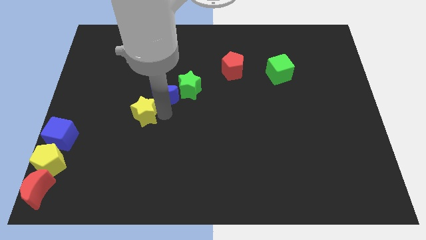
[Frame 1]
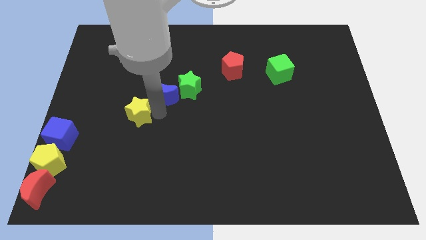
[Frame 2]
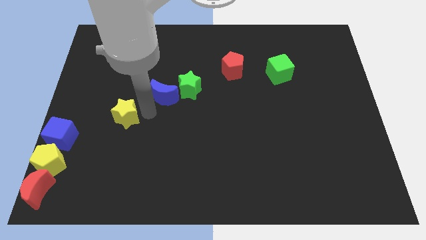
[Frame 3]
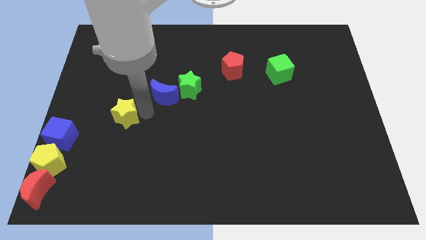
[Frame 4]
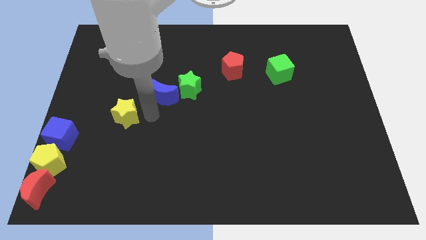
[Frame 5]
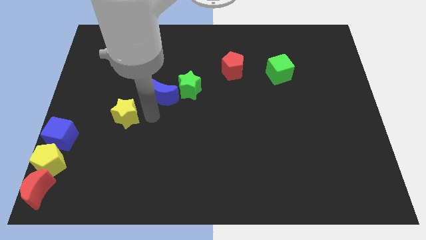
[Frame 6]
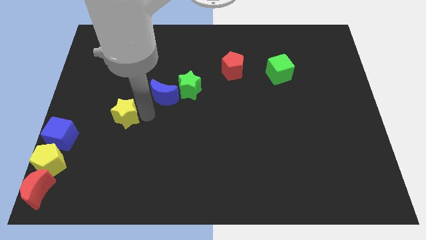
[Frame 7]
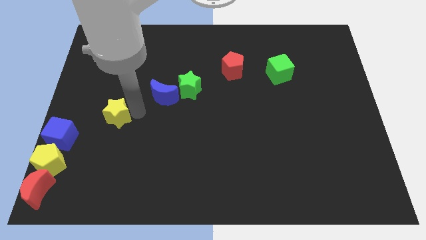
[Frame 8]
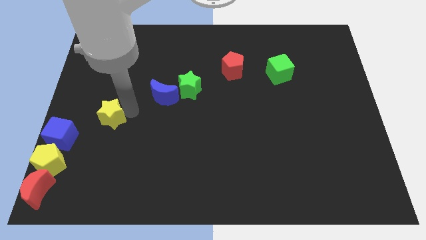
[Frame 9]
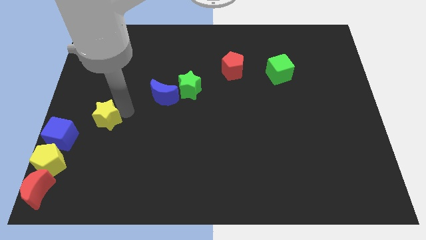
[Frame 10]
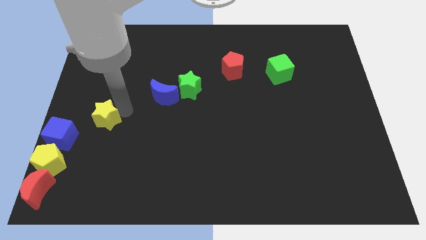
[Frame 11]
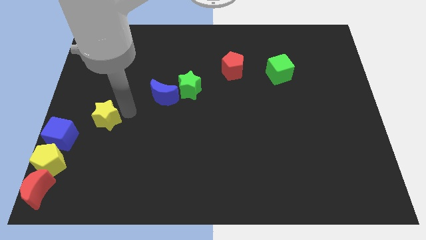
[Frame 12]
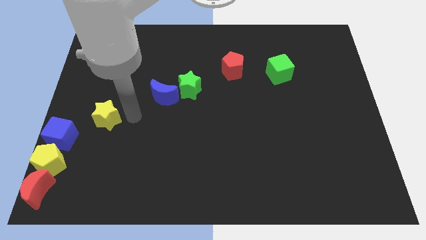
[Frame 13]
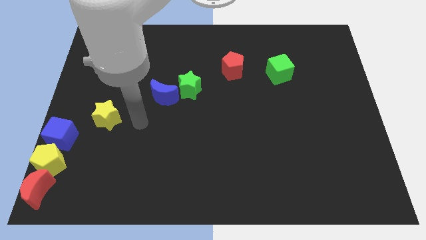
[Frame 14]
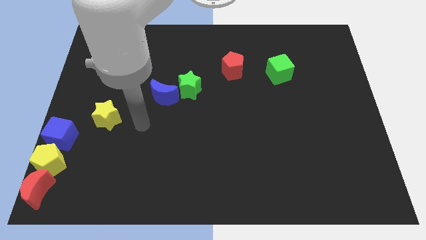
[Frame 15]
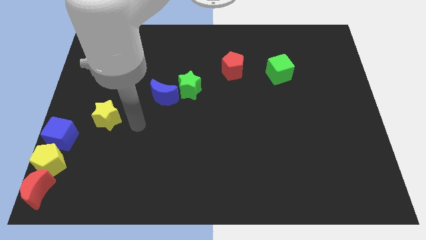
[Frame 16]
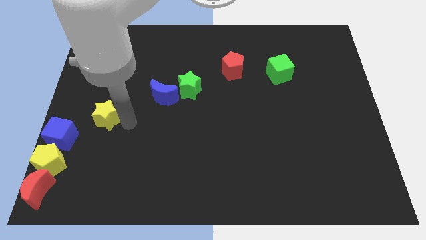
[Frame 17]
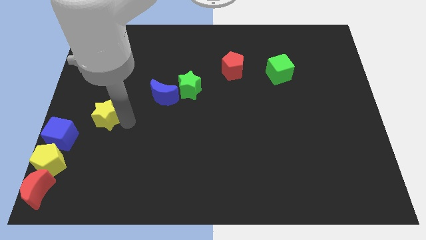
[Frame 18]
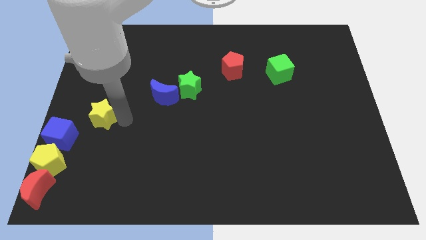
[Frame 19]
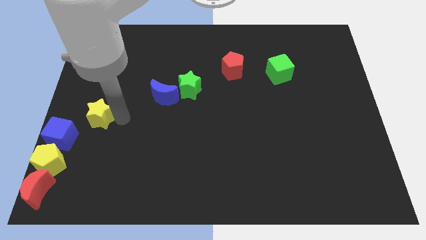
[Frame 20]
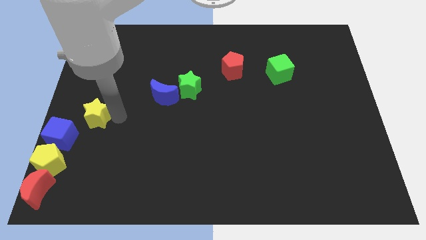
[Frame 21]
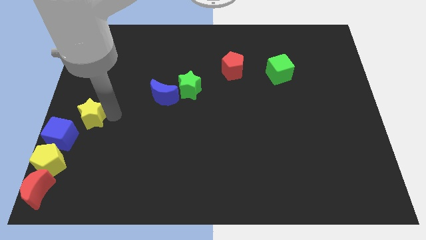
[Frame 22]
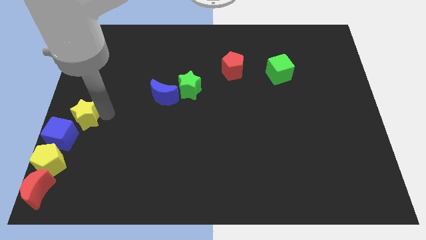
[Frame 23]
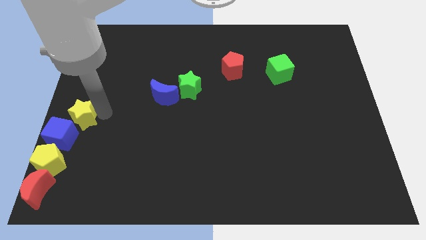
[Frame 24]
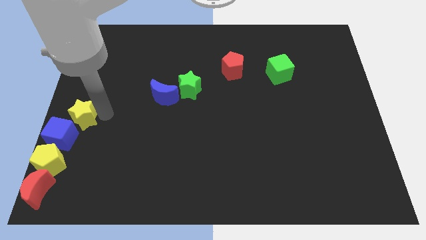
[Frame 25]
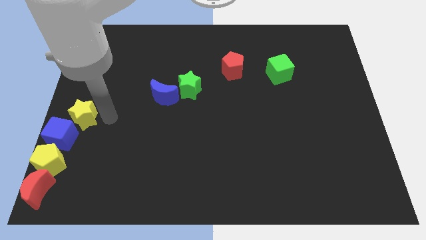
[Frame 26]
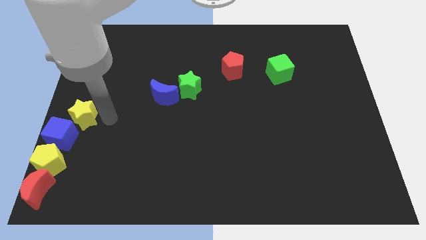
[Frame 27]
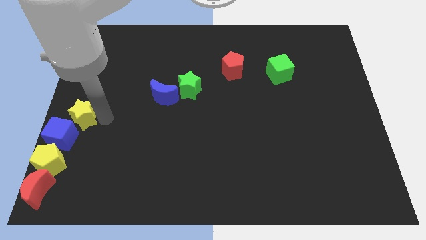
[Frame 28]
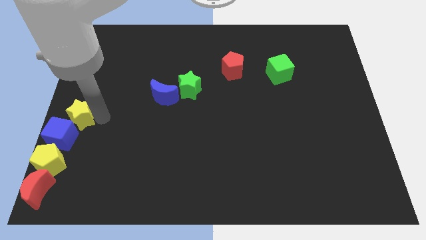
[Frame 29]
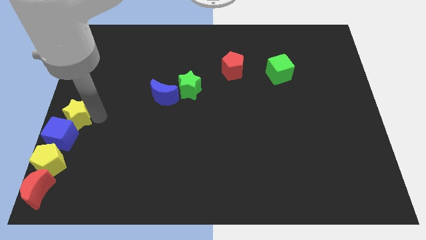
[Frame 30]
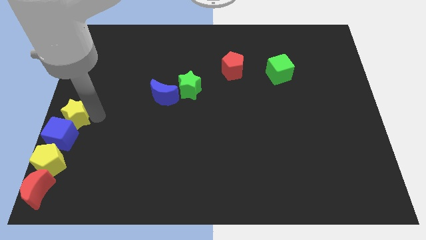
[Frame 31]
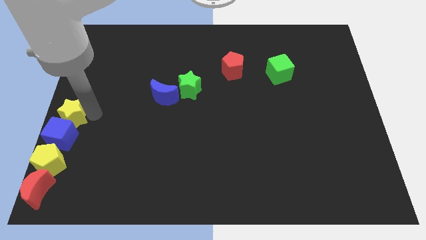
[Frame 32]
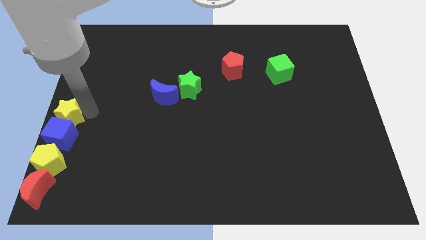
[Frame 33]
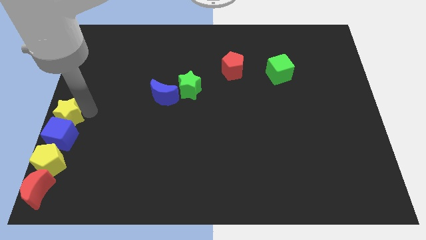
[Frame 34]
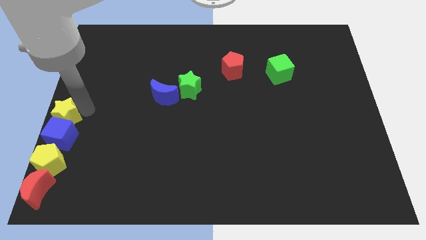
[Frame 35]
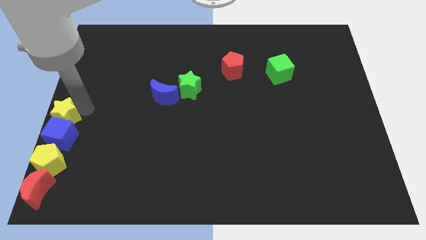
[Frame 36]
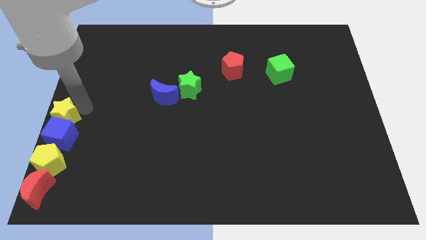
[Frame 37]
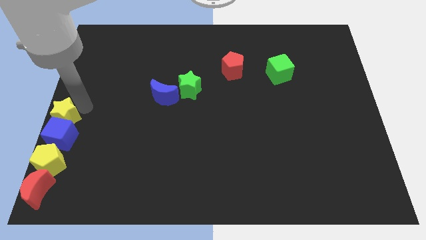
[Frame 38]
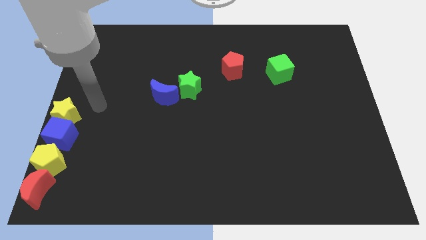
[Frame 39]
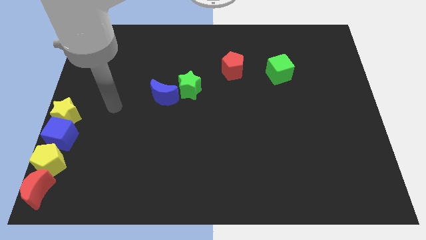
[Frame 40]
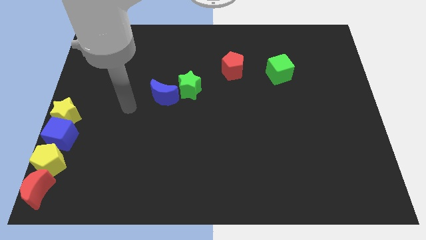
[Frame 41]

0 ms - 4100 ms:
move the yellow star above to the blue cube

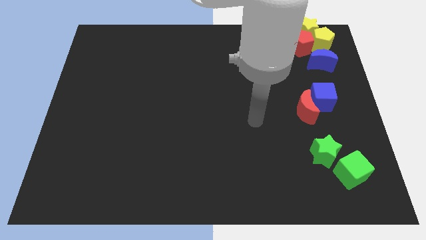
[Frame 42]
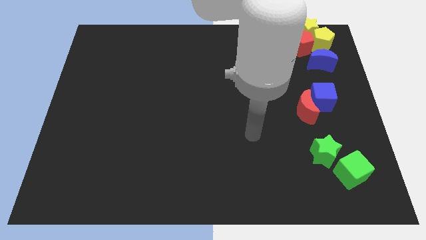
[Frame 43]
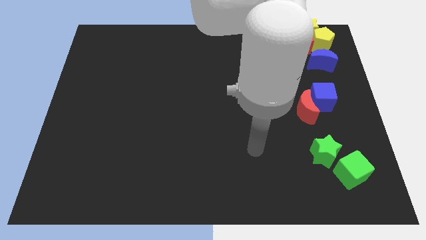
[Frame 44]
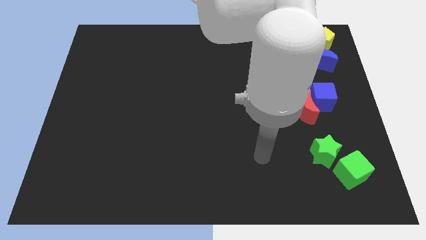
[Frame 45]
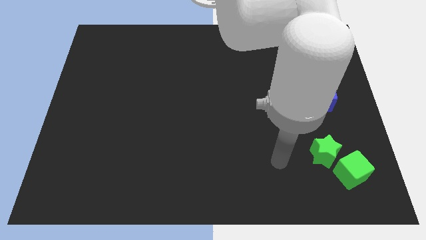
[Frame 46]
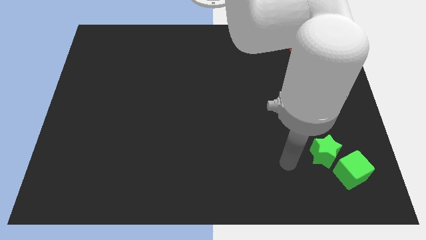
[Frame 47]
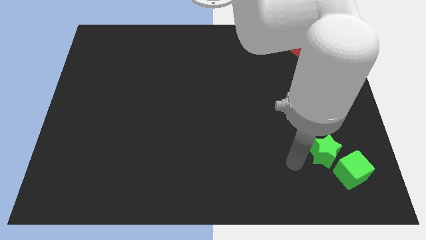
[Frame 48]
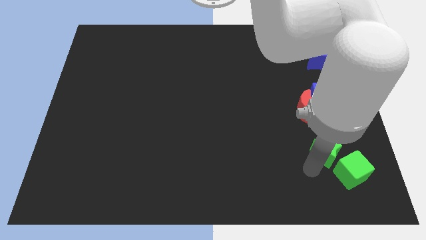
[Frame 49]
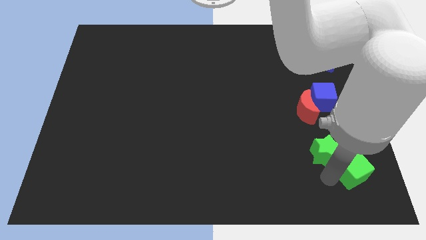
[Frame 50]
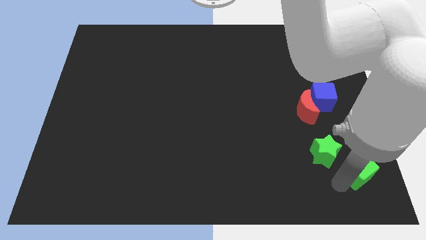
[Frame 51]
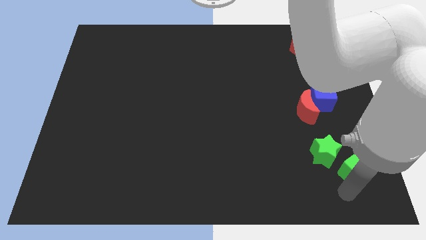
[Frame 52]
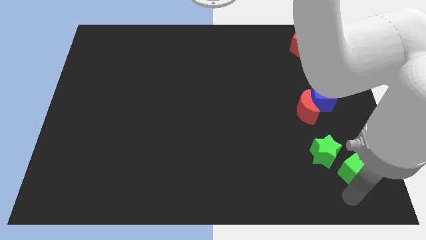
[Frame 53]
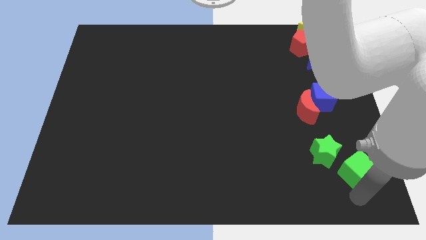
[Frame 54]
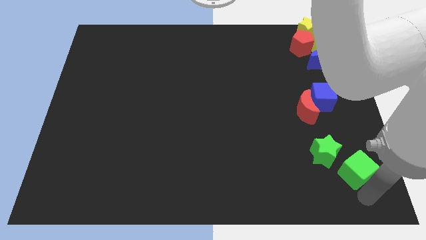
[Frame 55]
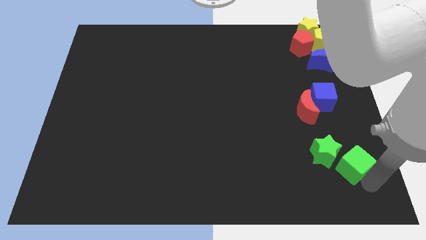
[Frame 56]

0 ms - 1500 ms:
touch the green cube with your arm

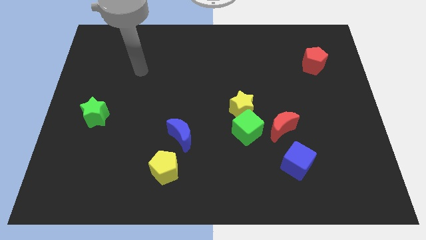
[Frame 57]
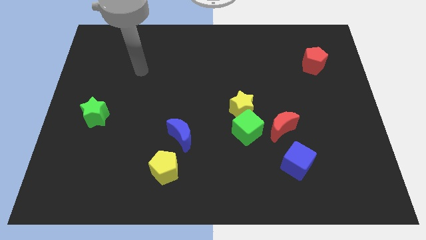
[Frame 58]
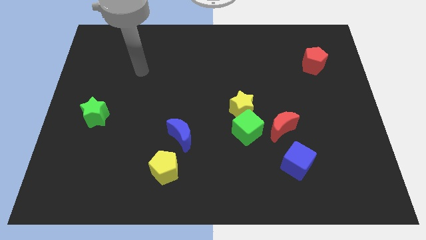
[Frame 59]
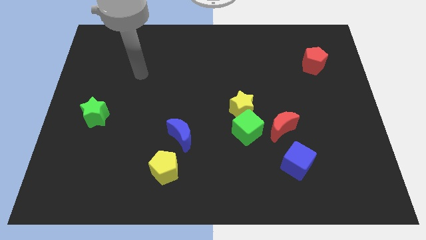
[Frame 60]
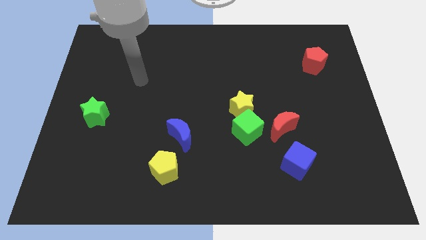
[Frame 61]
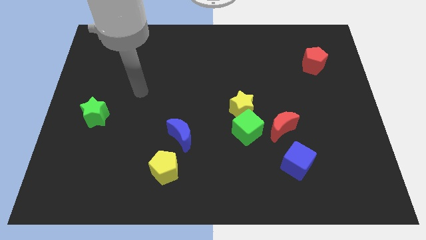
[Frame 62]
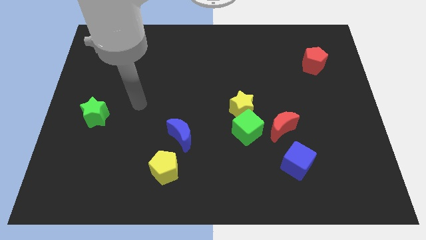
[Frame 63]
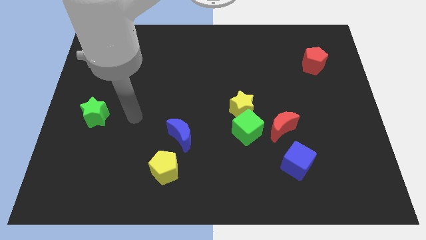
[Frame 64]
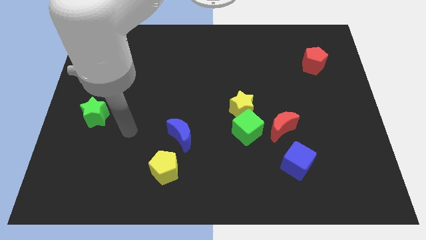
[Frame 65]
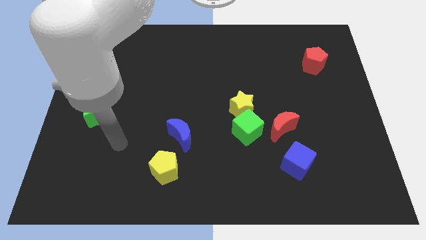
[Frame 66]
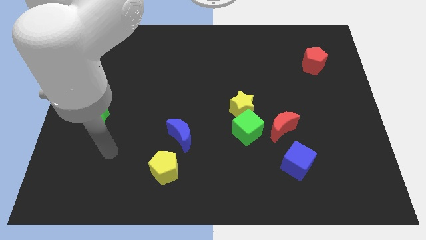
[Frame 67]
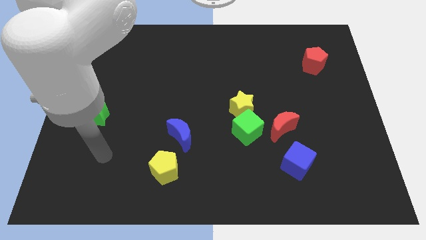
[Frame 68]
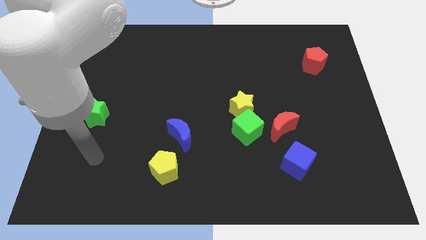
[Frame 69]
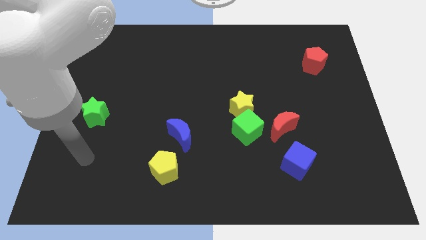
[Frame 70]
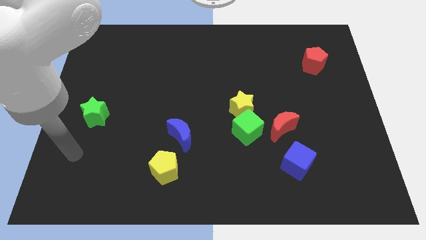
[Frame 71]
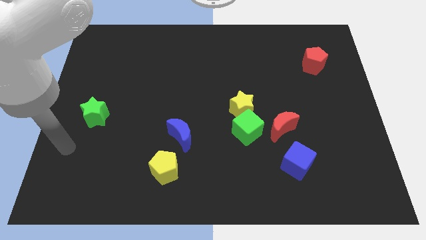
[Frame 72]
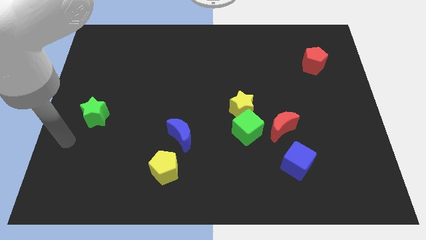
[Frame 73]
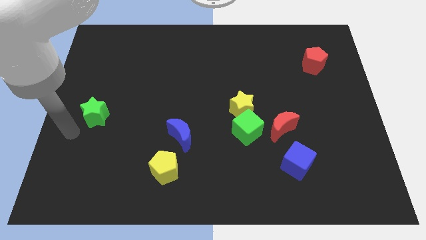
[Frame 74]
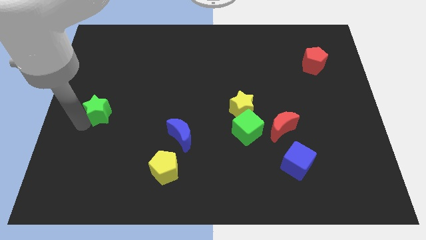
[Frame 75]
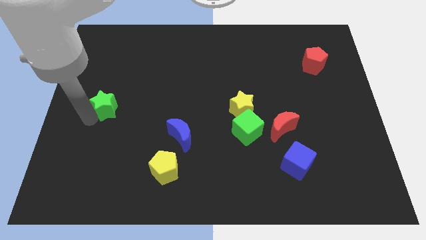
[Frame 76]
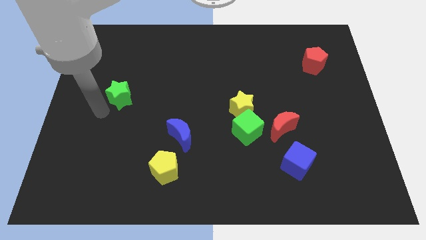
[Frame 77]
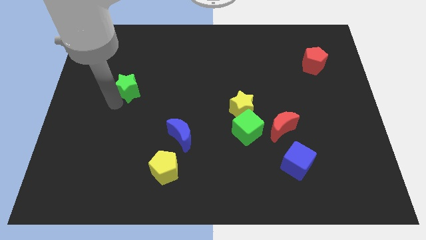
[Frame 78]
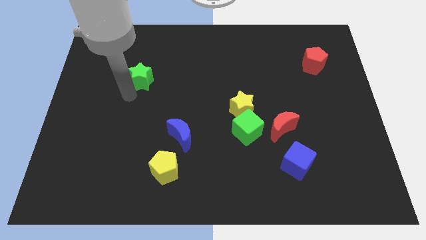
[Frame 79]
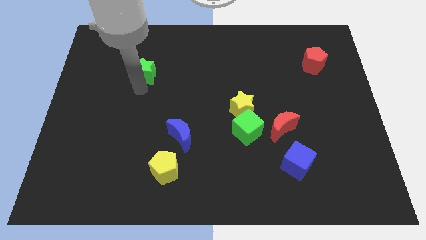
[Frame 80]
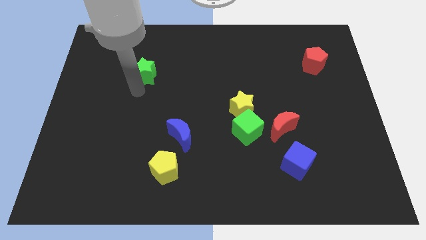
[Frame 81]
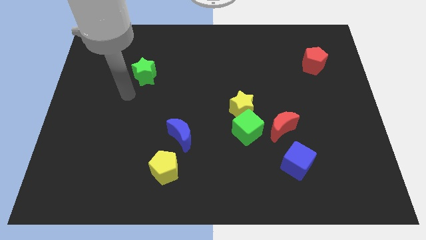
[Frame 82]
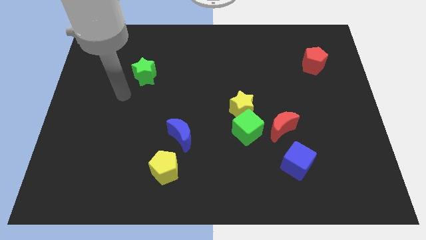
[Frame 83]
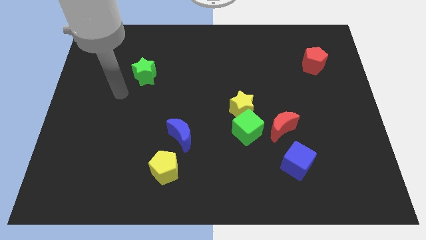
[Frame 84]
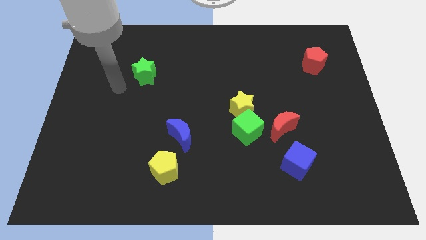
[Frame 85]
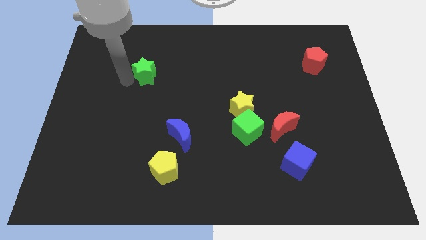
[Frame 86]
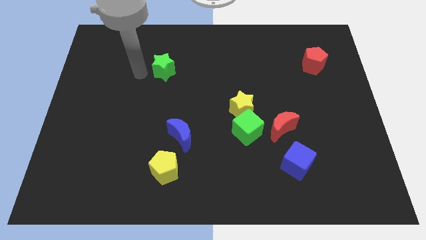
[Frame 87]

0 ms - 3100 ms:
slide green star slightly up vertical to yellow pentagon

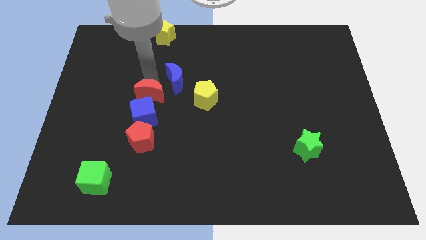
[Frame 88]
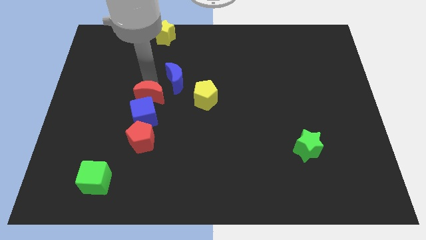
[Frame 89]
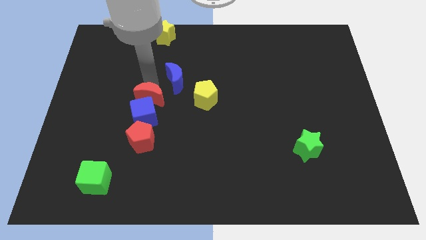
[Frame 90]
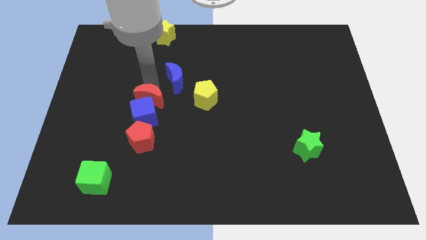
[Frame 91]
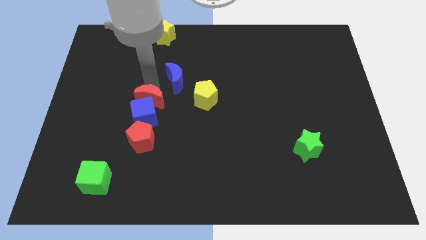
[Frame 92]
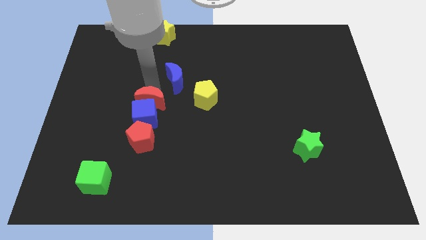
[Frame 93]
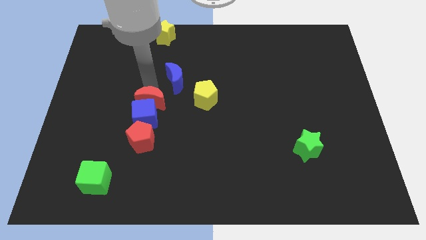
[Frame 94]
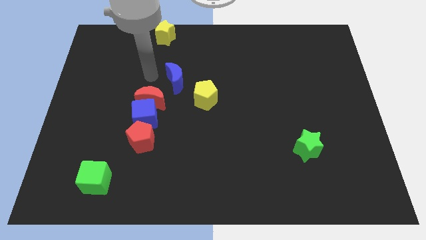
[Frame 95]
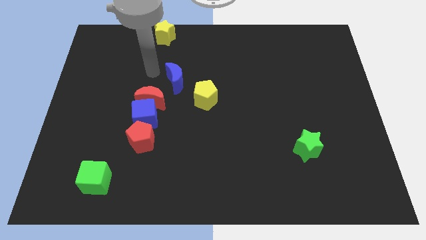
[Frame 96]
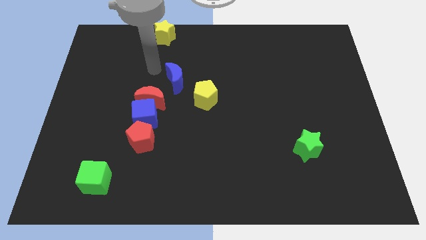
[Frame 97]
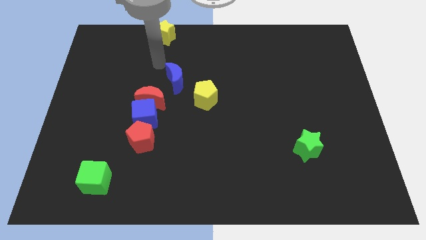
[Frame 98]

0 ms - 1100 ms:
push red moon into blue cube
